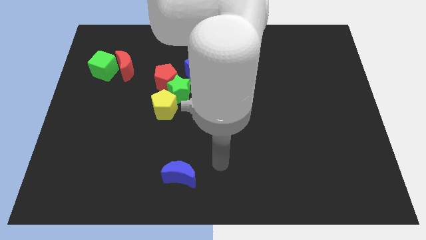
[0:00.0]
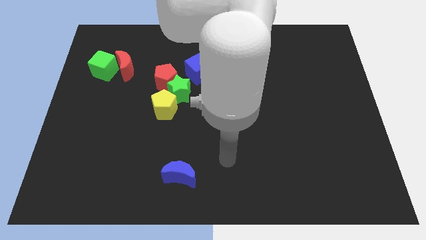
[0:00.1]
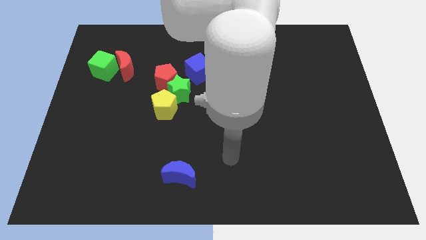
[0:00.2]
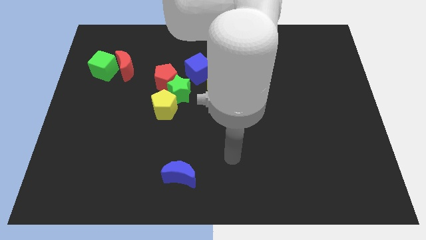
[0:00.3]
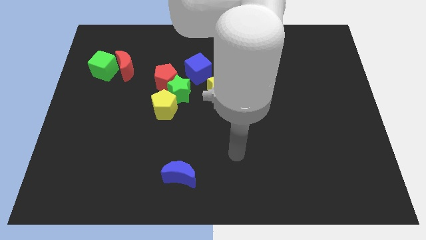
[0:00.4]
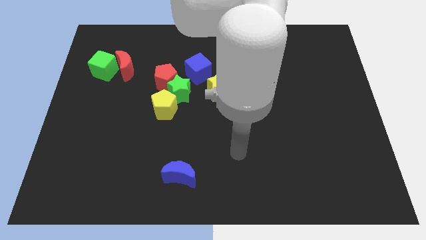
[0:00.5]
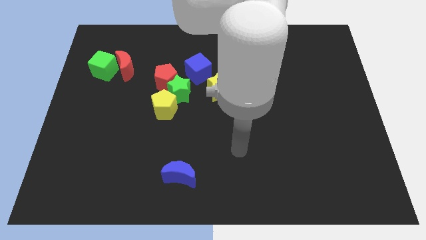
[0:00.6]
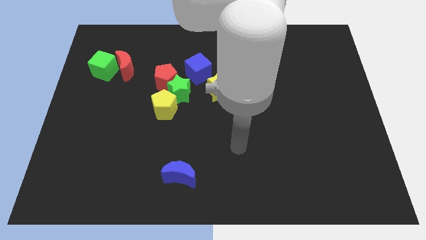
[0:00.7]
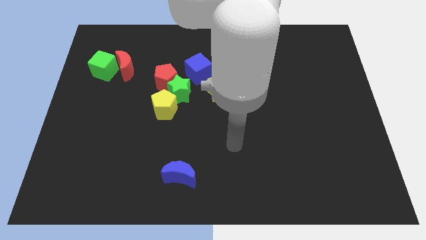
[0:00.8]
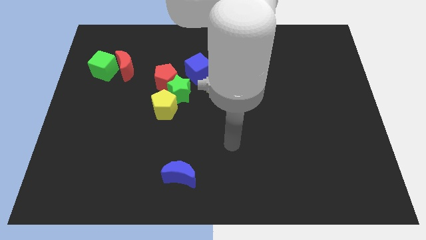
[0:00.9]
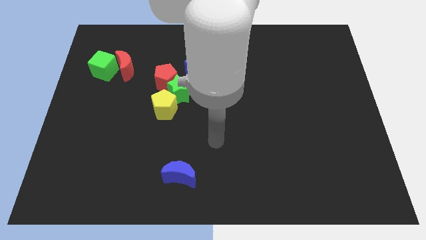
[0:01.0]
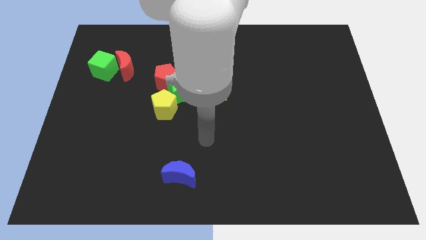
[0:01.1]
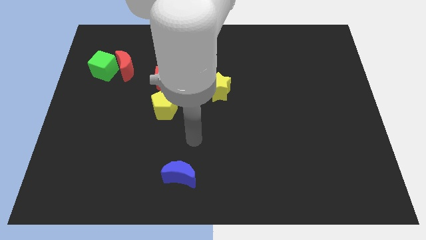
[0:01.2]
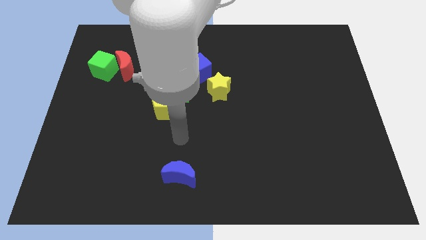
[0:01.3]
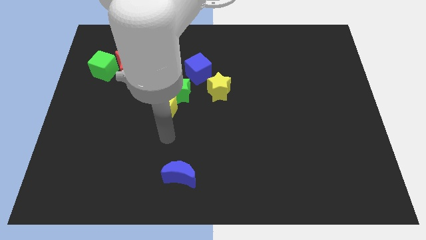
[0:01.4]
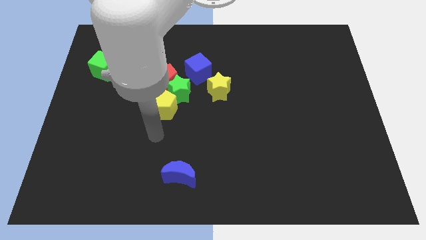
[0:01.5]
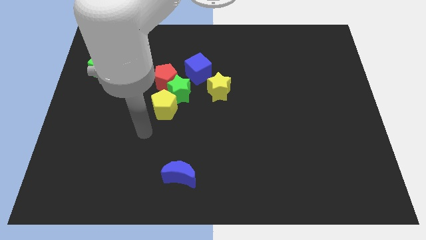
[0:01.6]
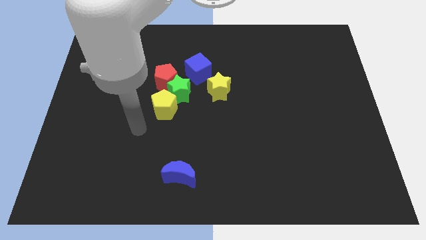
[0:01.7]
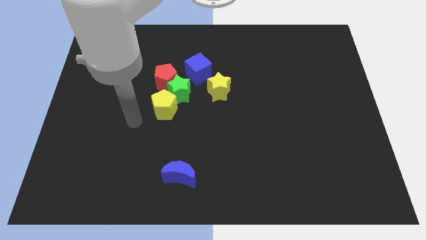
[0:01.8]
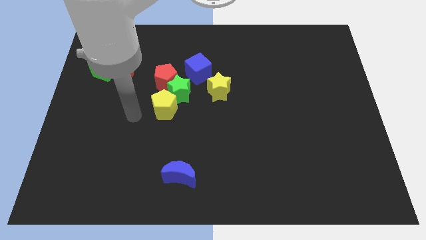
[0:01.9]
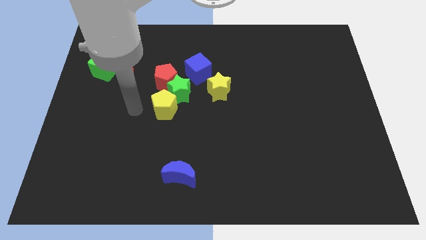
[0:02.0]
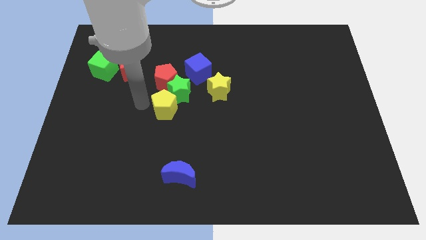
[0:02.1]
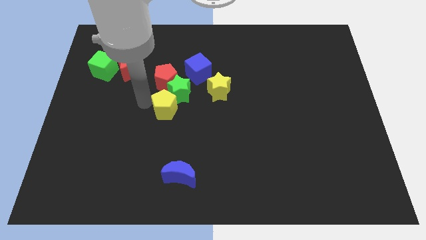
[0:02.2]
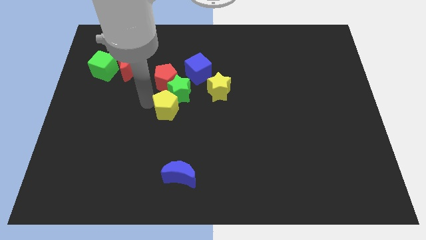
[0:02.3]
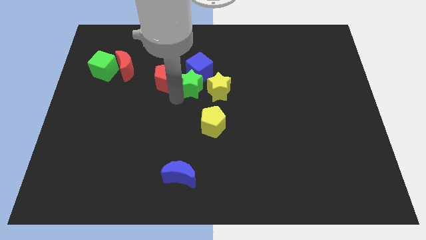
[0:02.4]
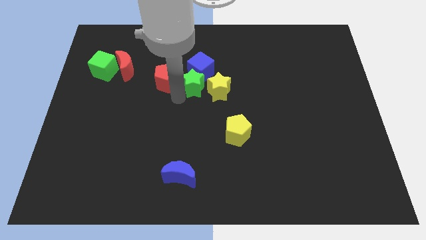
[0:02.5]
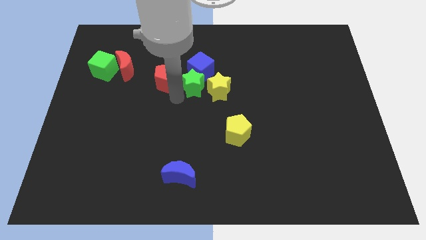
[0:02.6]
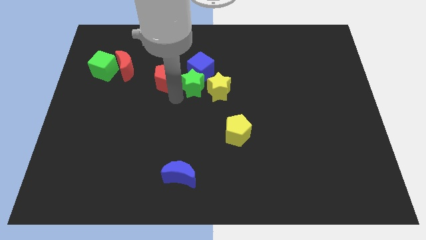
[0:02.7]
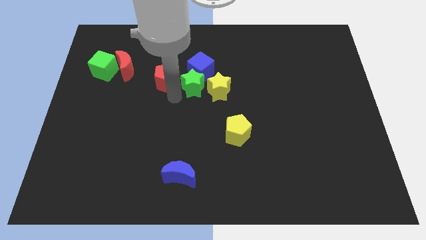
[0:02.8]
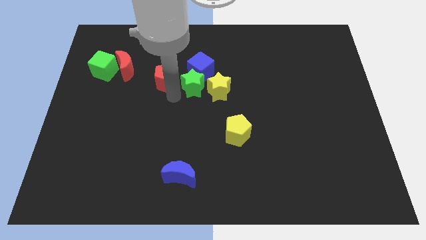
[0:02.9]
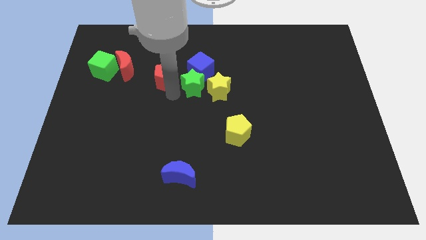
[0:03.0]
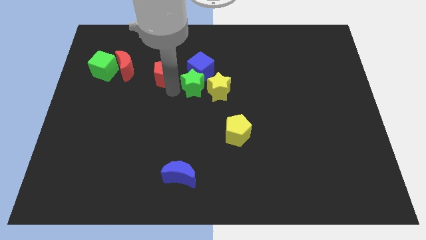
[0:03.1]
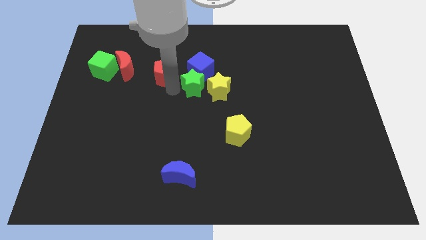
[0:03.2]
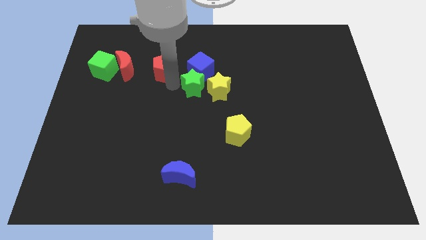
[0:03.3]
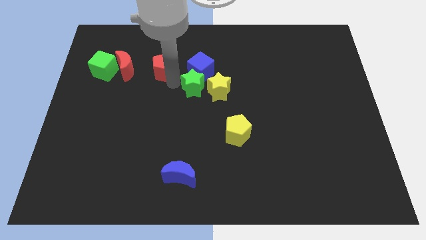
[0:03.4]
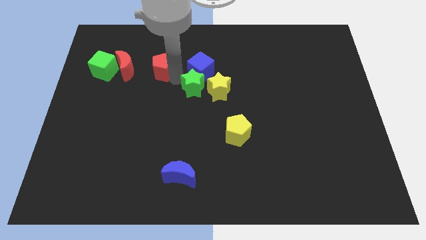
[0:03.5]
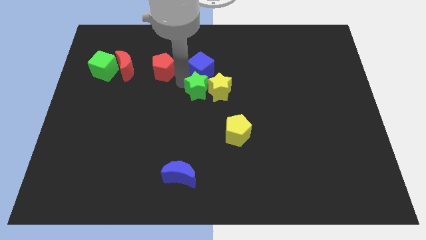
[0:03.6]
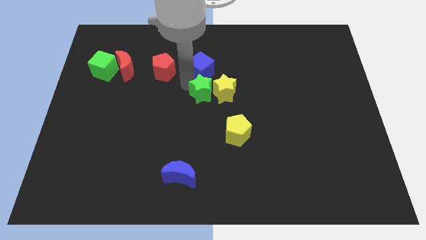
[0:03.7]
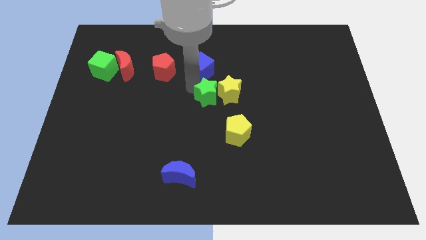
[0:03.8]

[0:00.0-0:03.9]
move the green star close to the yellow star

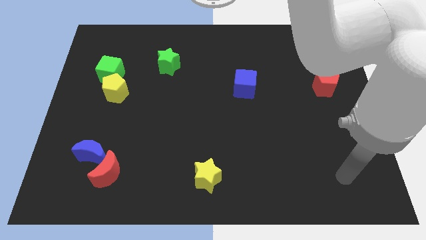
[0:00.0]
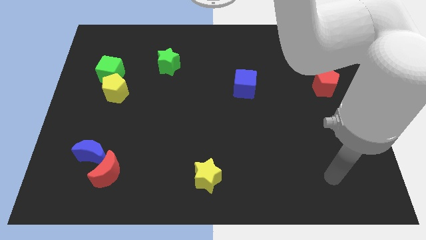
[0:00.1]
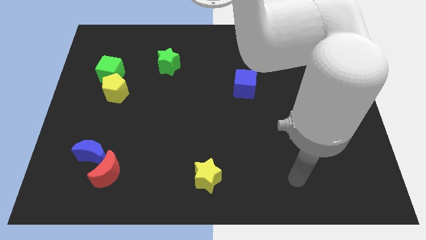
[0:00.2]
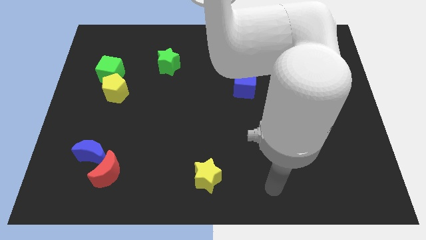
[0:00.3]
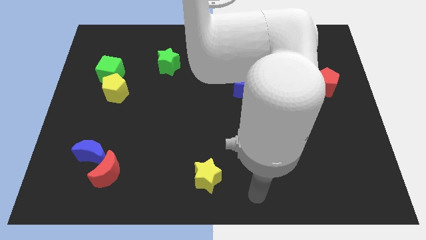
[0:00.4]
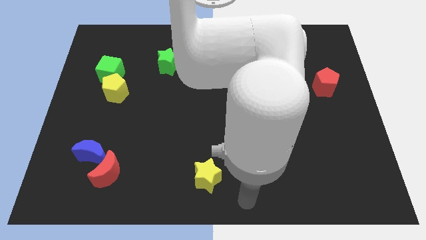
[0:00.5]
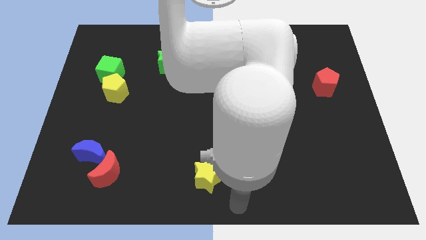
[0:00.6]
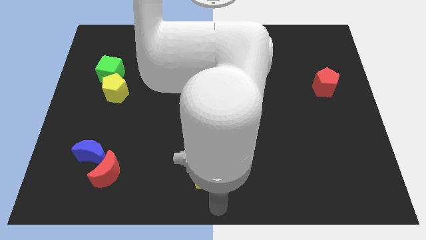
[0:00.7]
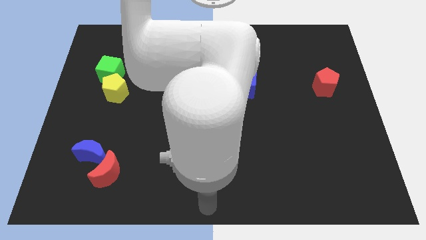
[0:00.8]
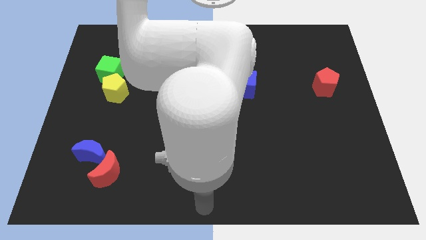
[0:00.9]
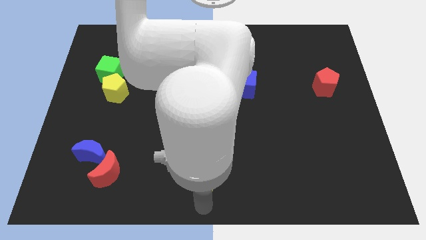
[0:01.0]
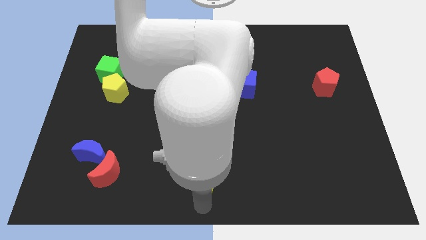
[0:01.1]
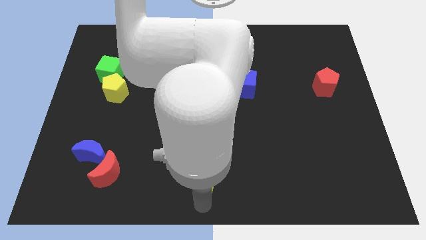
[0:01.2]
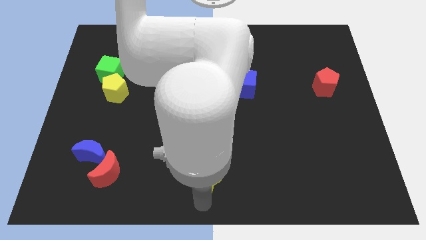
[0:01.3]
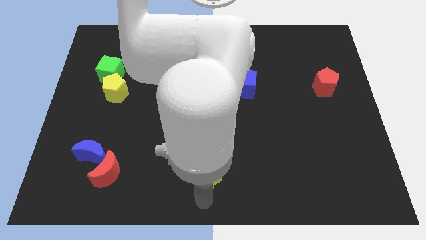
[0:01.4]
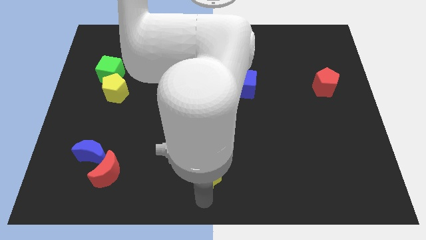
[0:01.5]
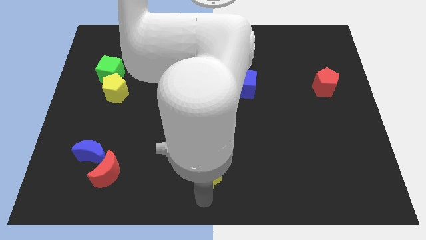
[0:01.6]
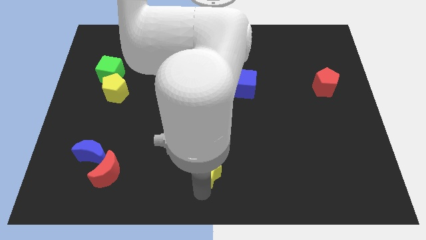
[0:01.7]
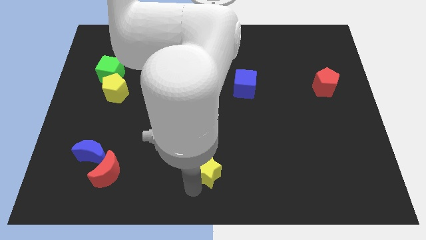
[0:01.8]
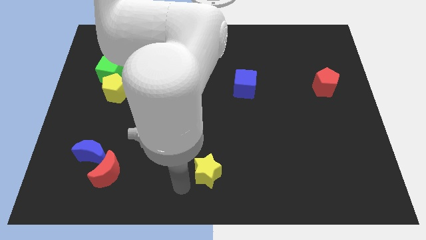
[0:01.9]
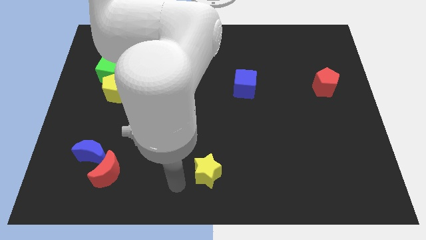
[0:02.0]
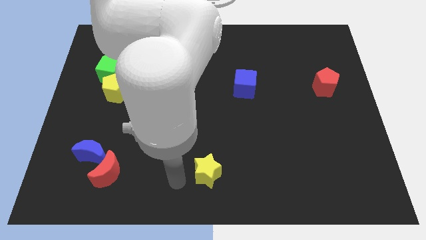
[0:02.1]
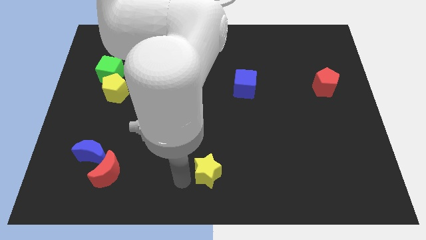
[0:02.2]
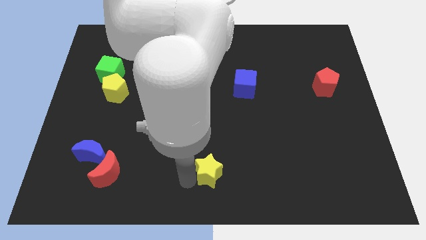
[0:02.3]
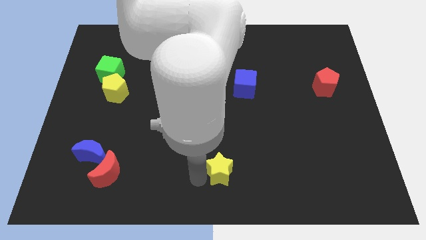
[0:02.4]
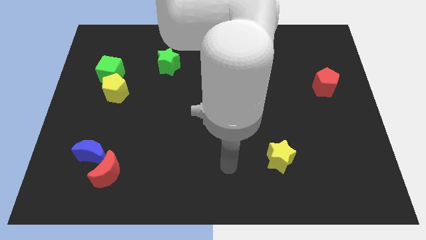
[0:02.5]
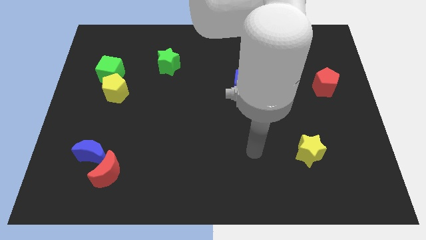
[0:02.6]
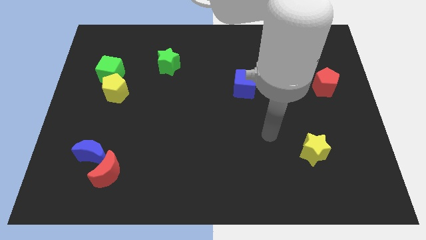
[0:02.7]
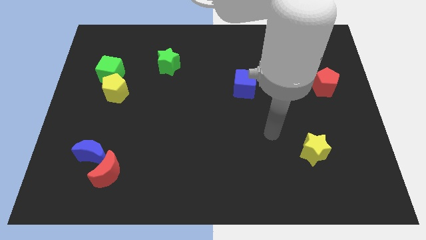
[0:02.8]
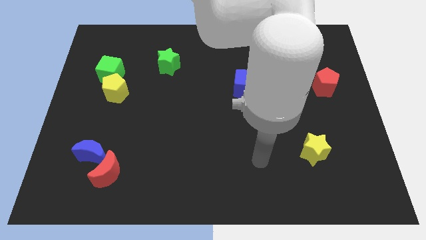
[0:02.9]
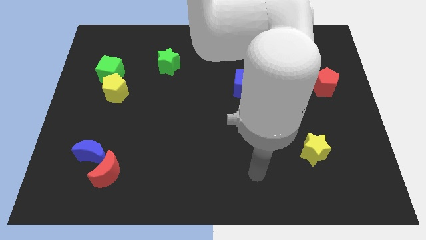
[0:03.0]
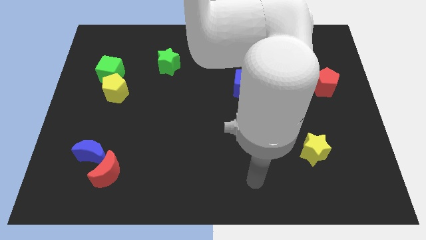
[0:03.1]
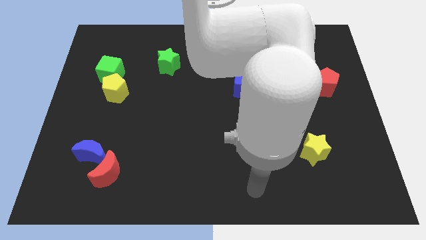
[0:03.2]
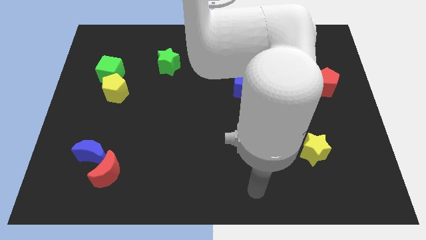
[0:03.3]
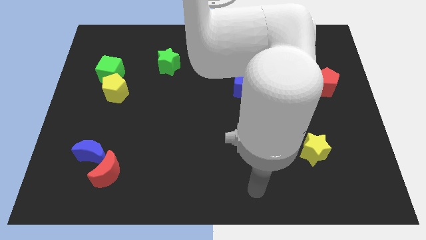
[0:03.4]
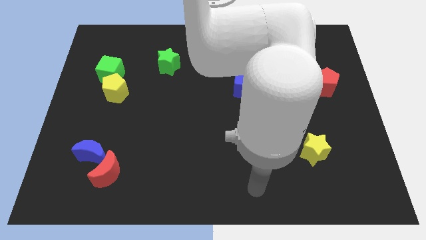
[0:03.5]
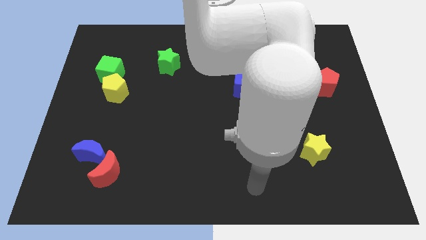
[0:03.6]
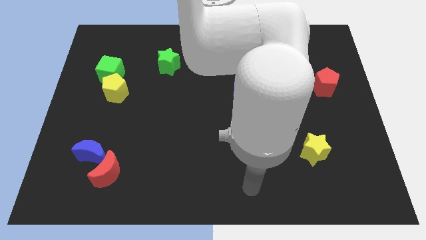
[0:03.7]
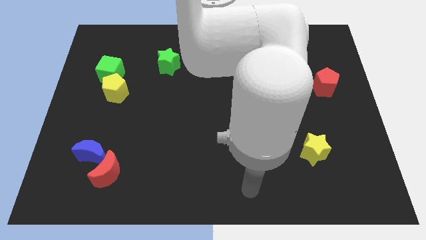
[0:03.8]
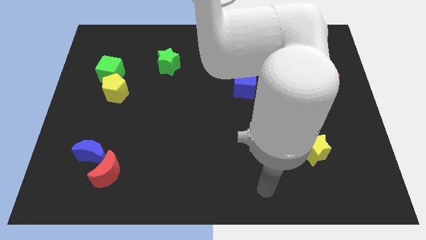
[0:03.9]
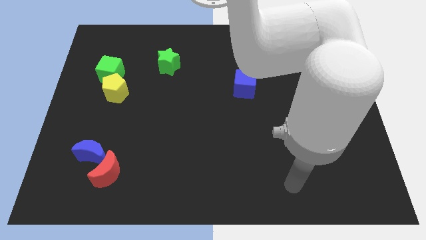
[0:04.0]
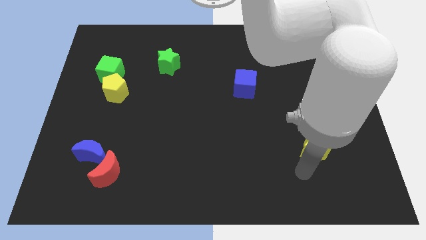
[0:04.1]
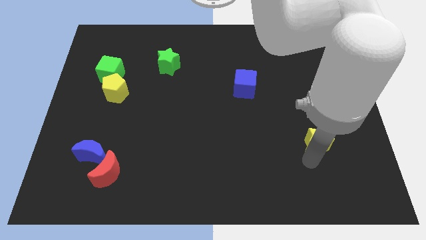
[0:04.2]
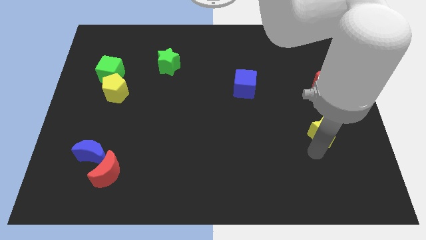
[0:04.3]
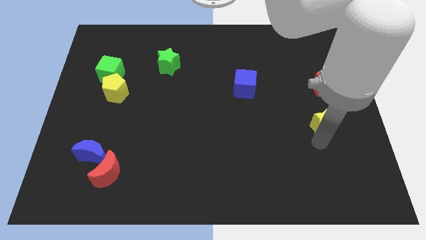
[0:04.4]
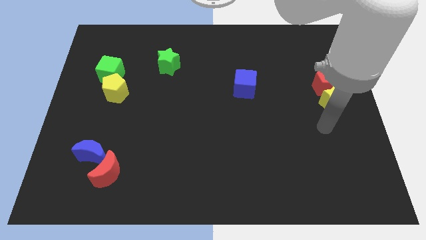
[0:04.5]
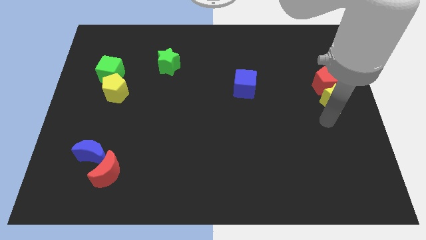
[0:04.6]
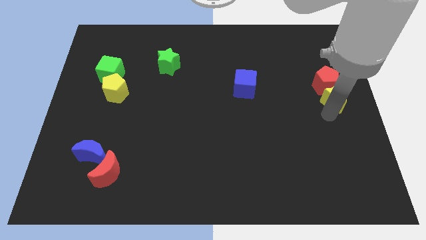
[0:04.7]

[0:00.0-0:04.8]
move the yellow star to the red pentagon
